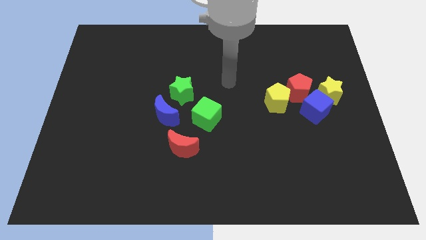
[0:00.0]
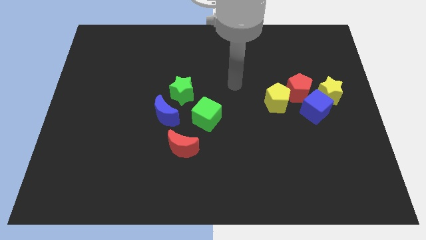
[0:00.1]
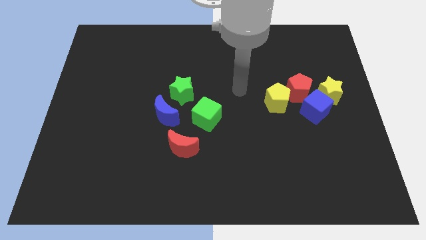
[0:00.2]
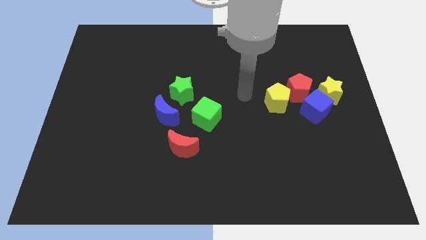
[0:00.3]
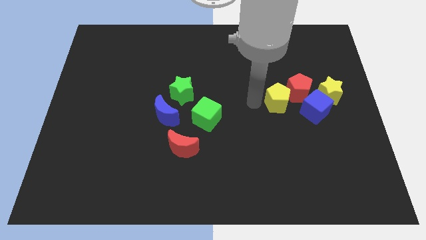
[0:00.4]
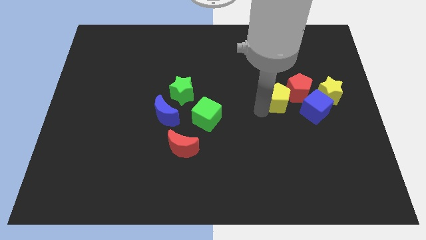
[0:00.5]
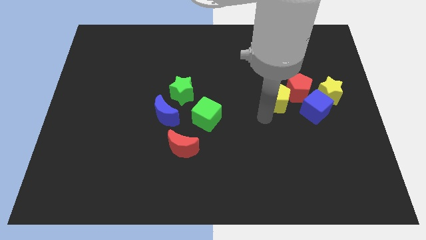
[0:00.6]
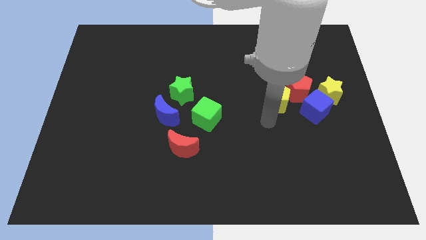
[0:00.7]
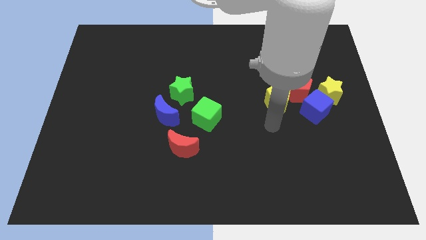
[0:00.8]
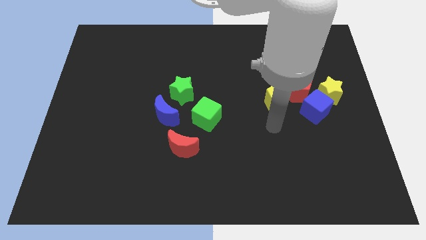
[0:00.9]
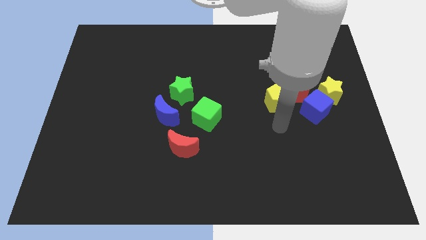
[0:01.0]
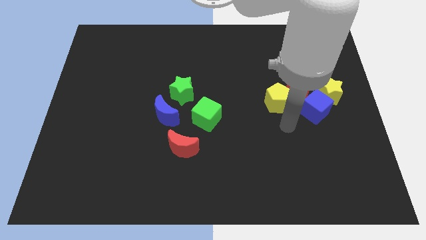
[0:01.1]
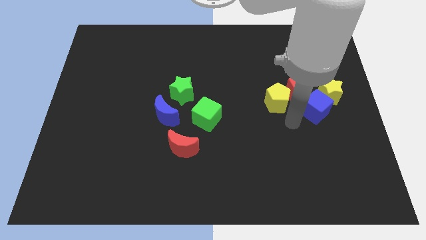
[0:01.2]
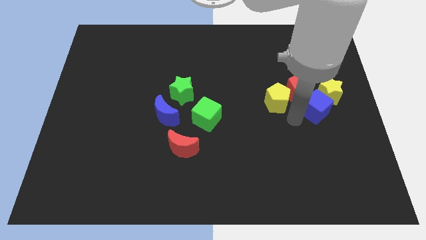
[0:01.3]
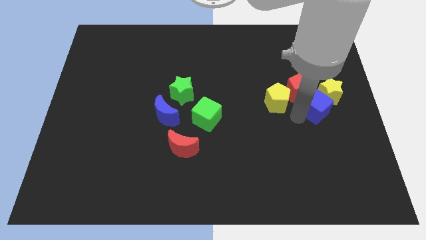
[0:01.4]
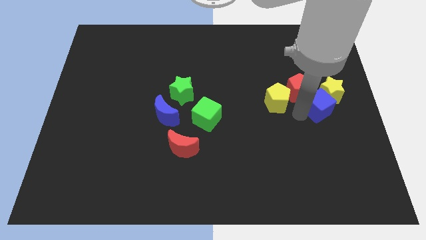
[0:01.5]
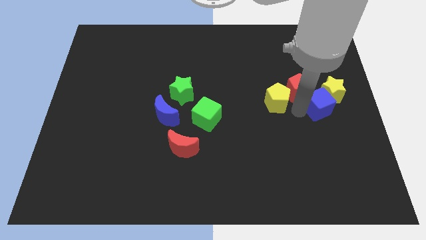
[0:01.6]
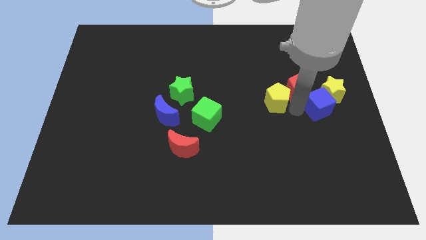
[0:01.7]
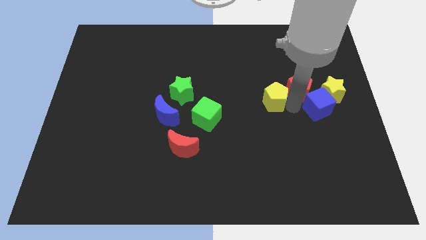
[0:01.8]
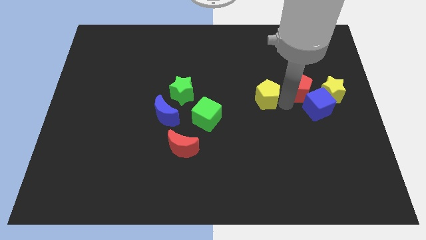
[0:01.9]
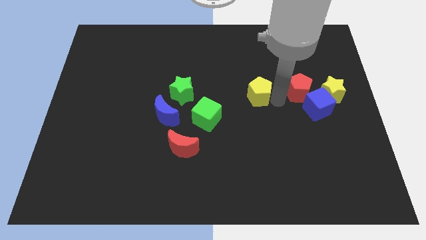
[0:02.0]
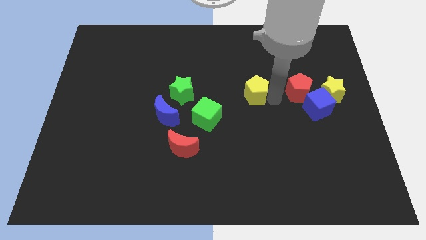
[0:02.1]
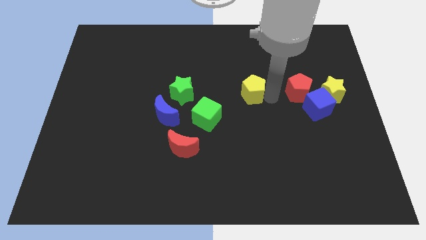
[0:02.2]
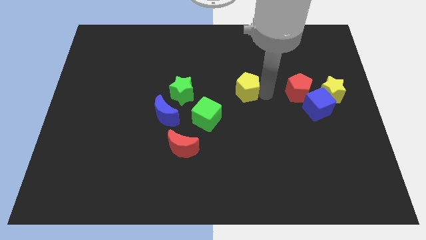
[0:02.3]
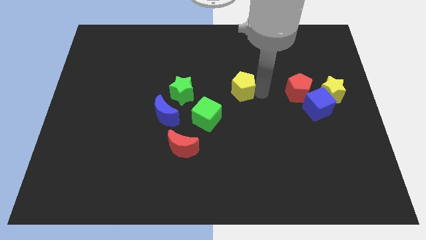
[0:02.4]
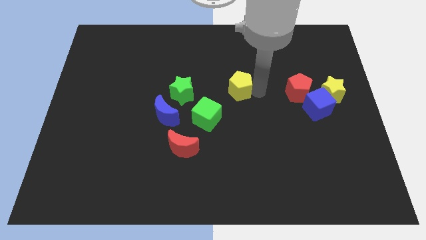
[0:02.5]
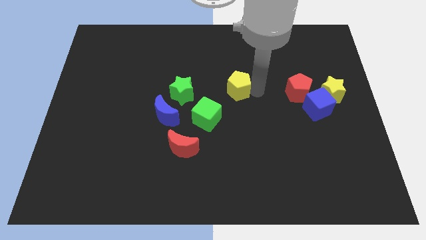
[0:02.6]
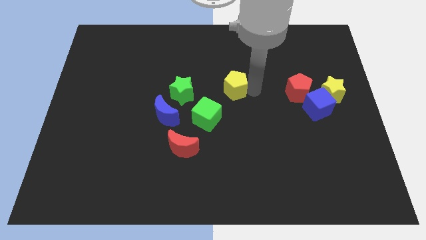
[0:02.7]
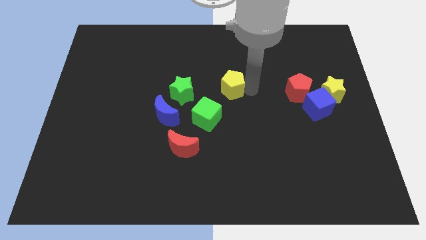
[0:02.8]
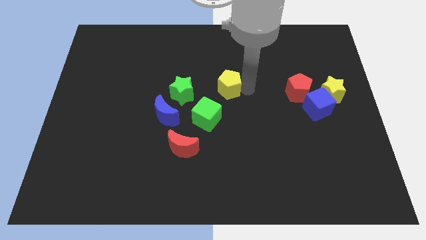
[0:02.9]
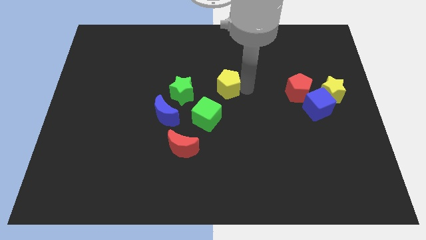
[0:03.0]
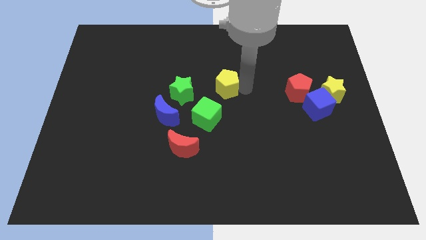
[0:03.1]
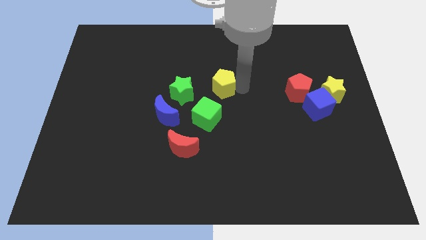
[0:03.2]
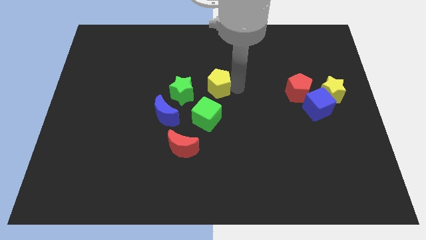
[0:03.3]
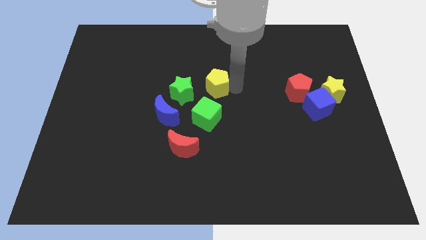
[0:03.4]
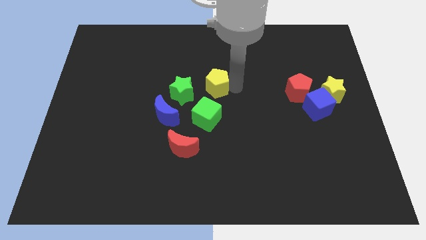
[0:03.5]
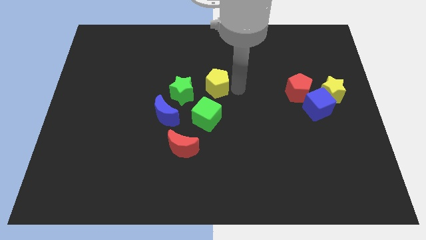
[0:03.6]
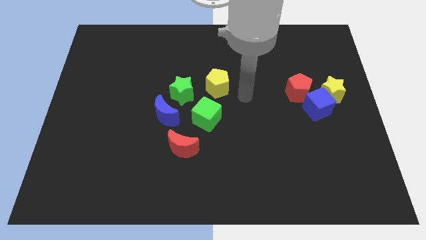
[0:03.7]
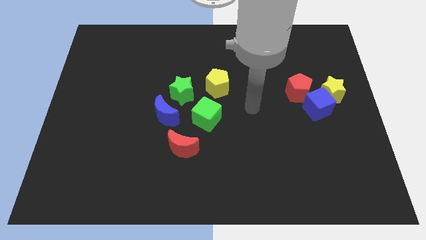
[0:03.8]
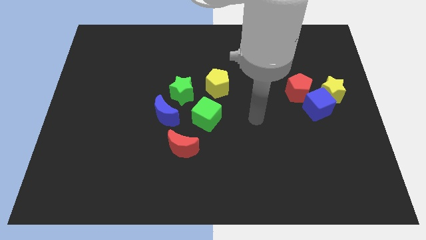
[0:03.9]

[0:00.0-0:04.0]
push the yellow pentagon to the top of the green cube

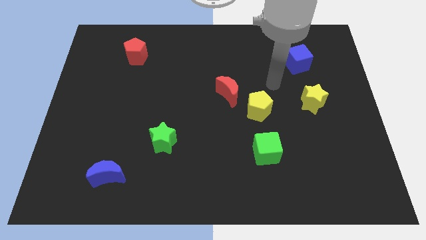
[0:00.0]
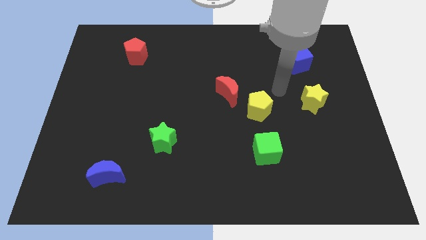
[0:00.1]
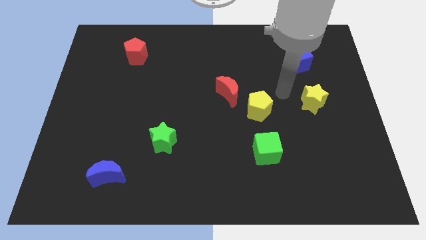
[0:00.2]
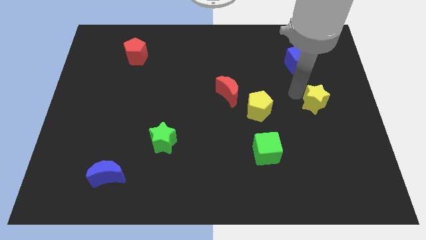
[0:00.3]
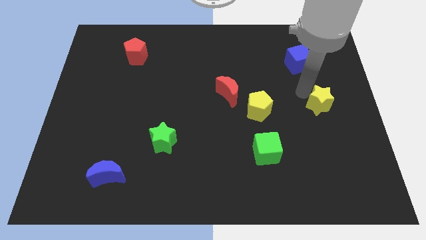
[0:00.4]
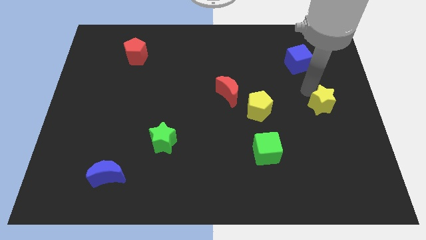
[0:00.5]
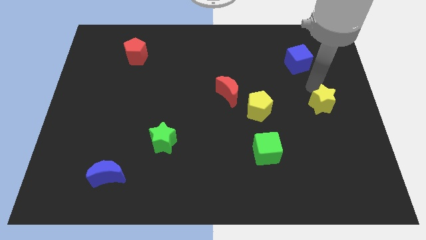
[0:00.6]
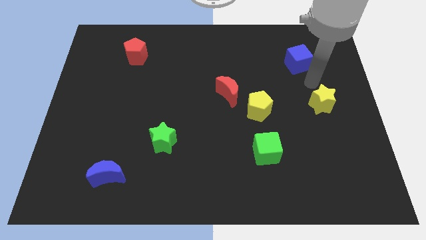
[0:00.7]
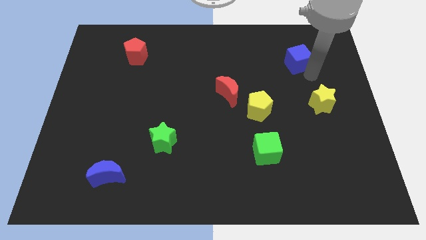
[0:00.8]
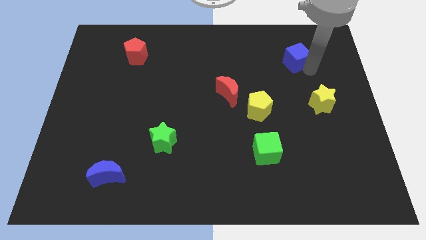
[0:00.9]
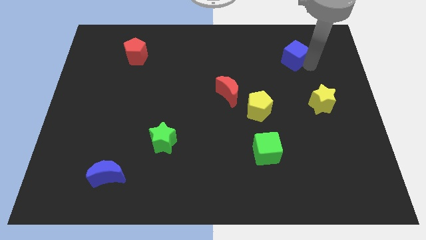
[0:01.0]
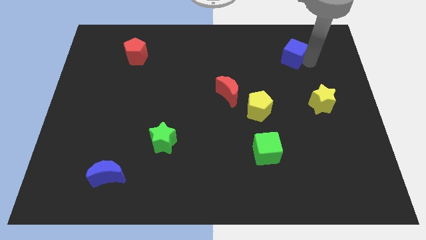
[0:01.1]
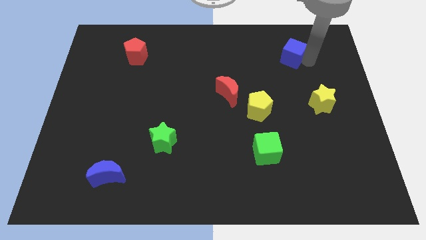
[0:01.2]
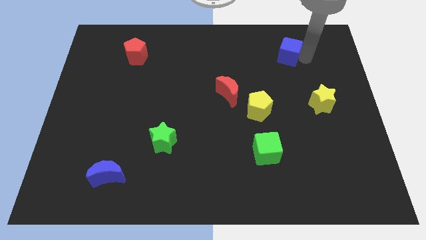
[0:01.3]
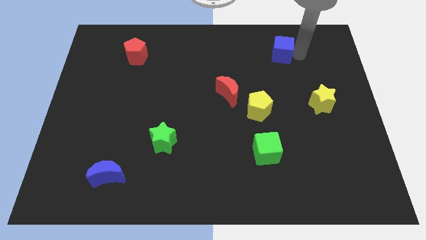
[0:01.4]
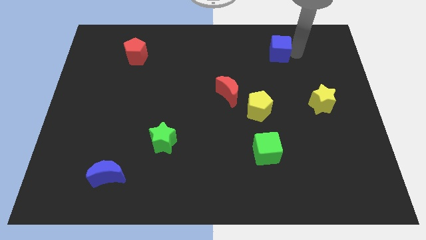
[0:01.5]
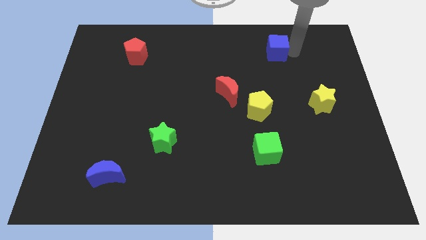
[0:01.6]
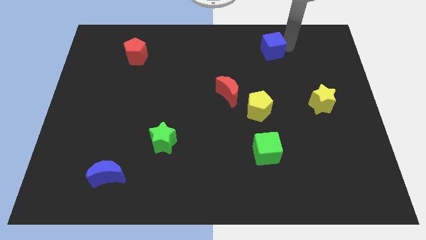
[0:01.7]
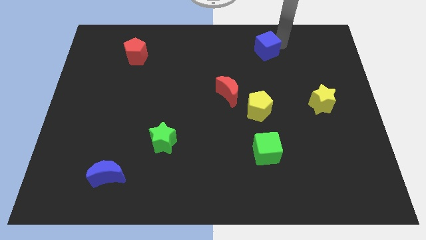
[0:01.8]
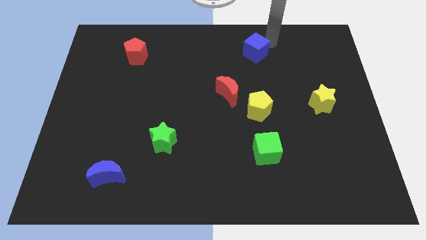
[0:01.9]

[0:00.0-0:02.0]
place the blue cube above the yellow pentagon

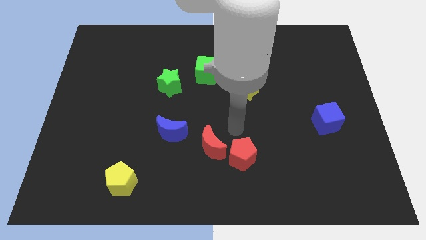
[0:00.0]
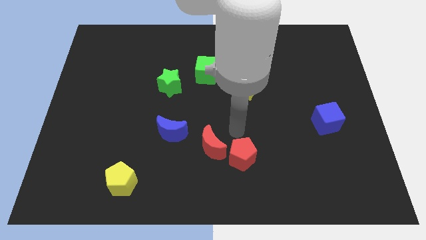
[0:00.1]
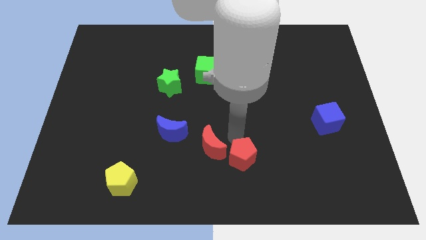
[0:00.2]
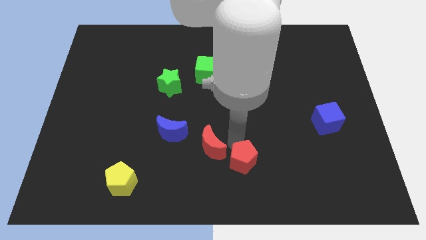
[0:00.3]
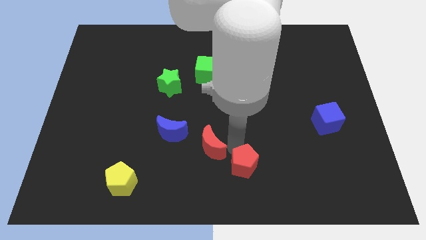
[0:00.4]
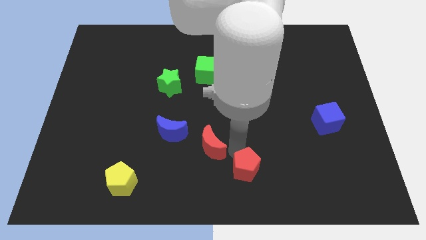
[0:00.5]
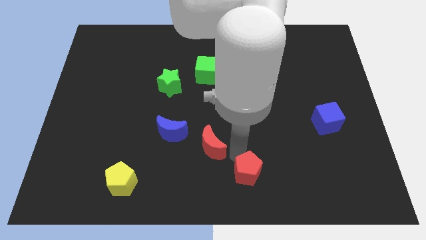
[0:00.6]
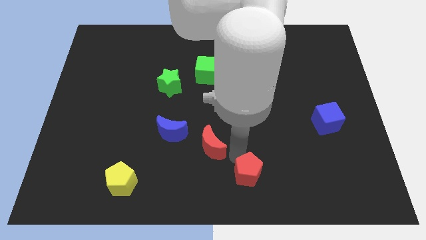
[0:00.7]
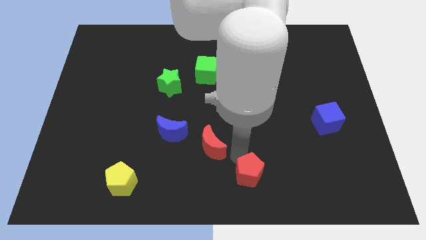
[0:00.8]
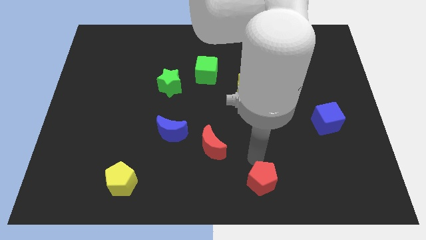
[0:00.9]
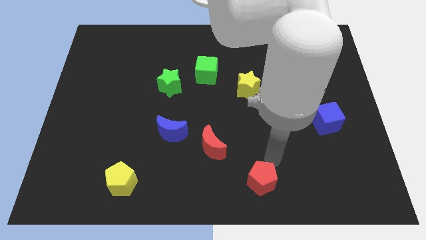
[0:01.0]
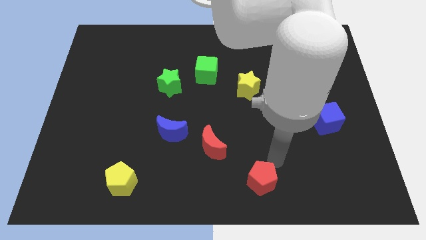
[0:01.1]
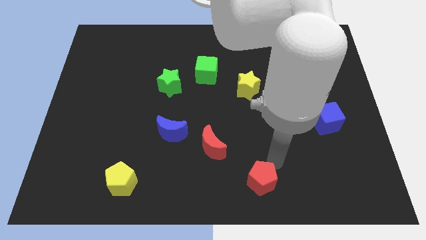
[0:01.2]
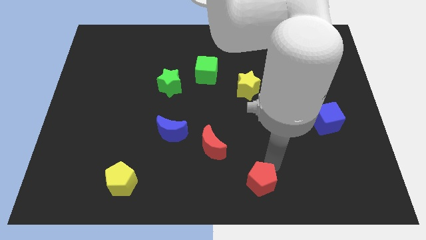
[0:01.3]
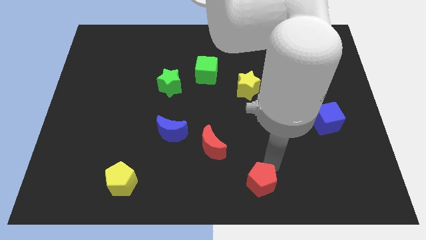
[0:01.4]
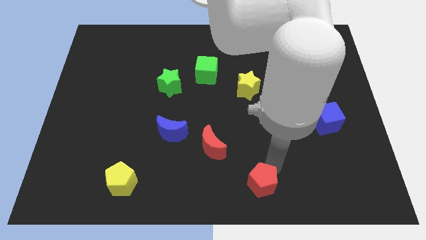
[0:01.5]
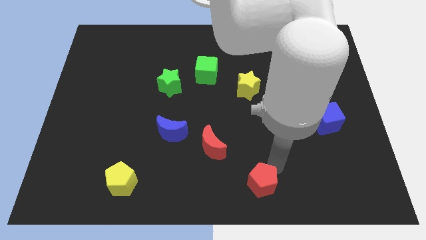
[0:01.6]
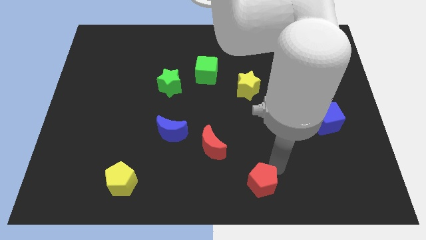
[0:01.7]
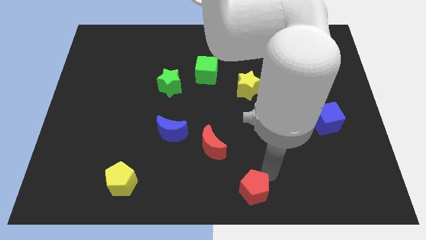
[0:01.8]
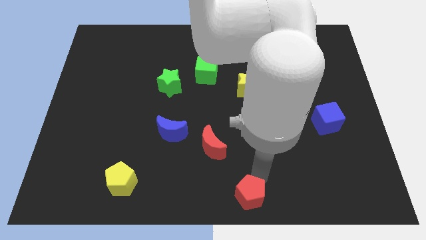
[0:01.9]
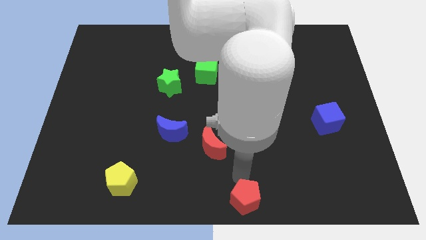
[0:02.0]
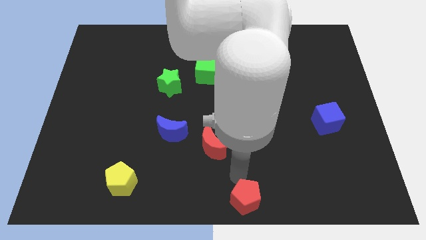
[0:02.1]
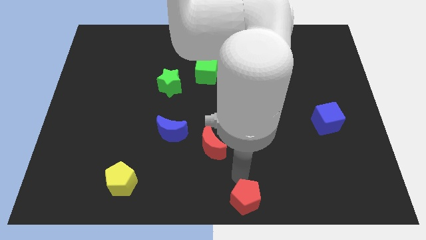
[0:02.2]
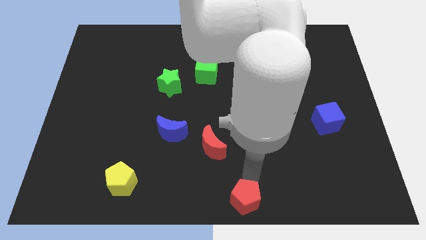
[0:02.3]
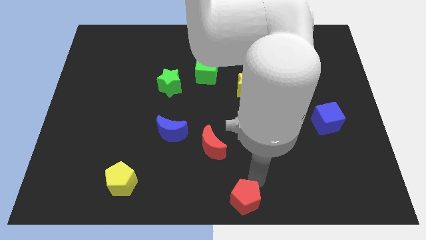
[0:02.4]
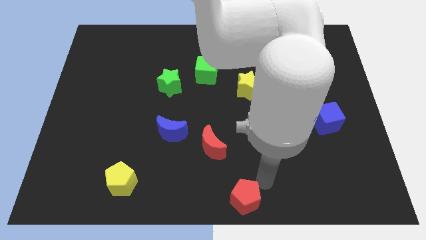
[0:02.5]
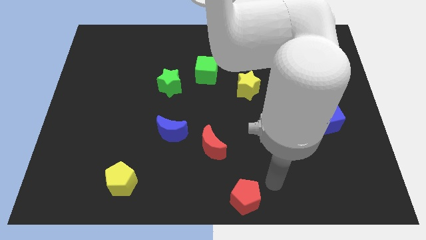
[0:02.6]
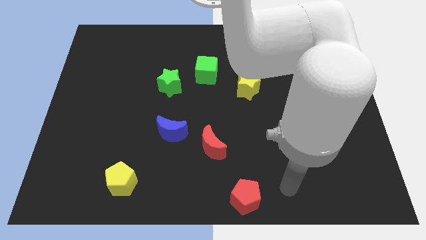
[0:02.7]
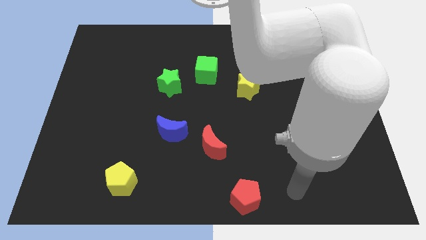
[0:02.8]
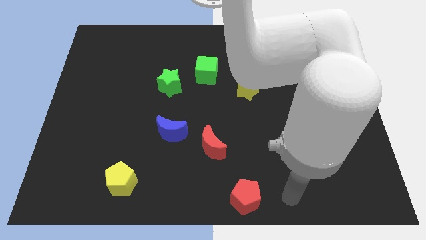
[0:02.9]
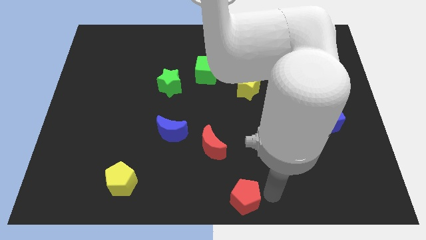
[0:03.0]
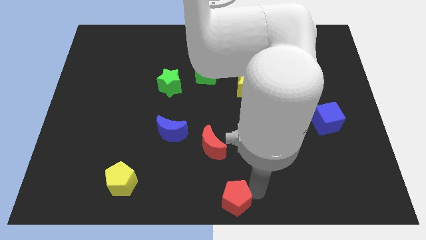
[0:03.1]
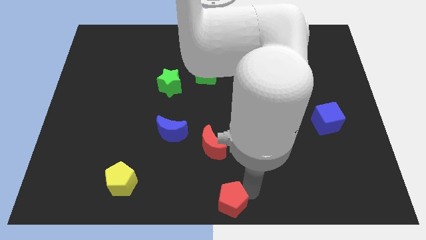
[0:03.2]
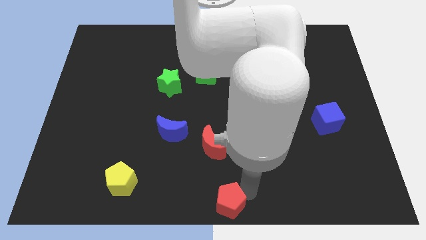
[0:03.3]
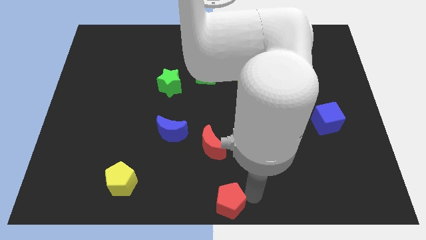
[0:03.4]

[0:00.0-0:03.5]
push the red pentagon towards the bottom center of the board
